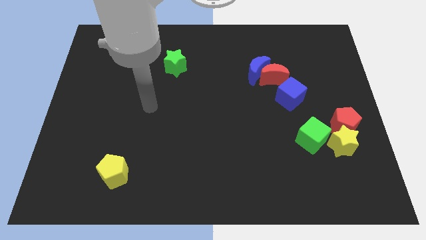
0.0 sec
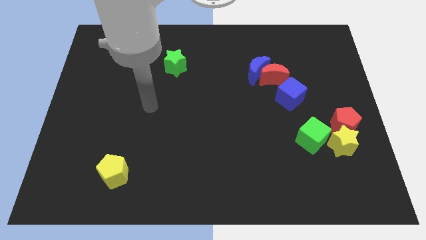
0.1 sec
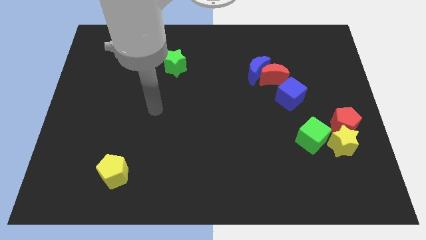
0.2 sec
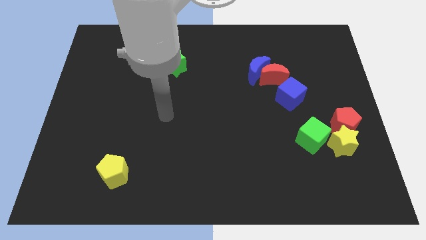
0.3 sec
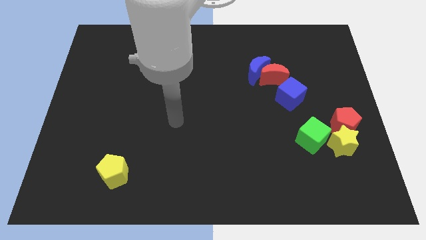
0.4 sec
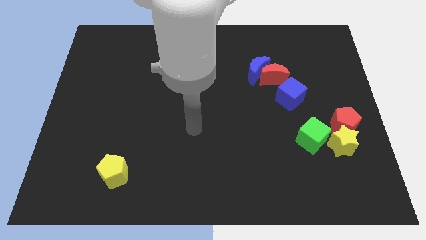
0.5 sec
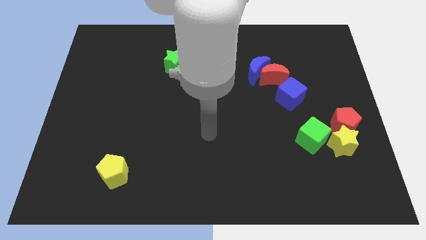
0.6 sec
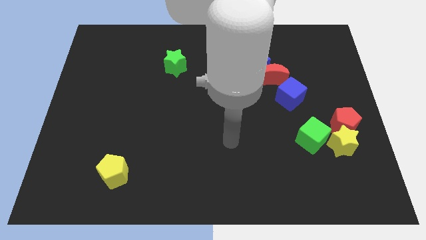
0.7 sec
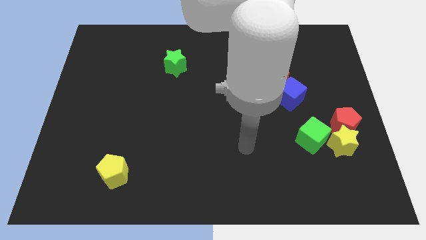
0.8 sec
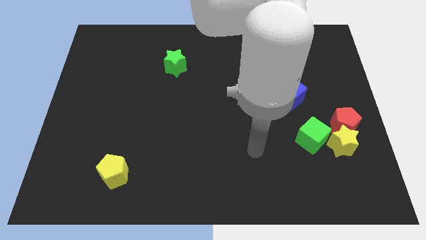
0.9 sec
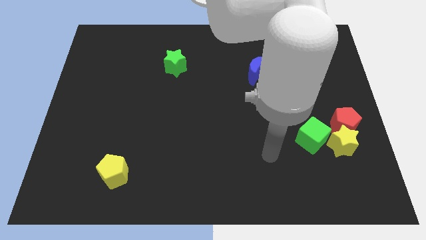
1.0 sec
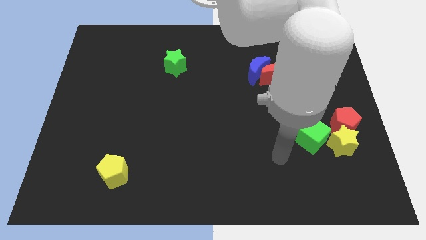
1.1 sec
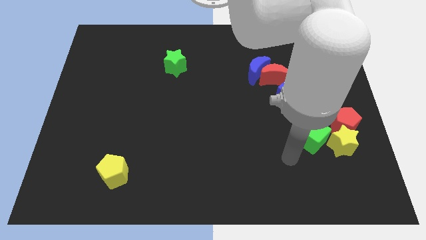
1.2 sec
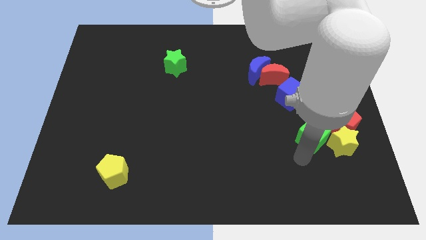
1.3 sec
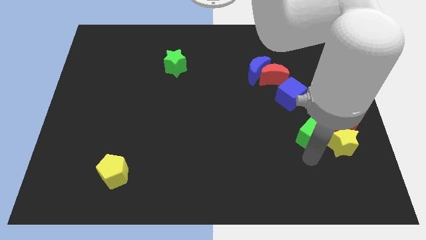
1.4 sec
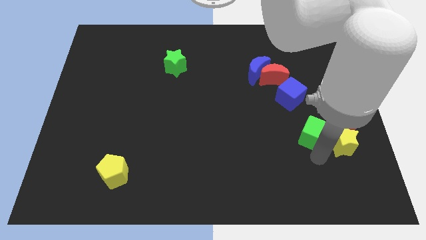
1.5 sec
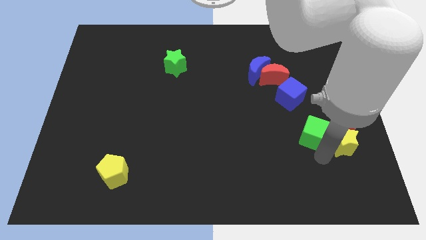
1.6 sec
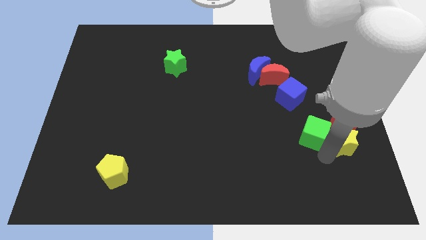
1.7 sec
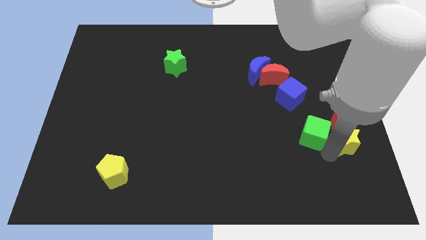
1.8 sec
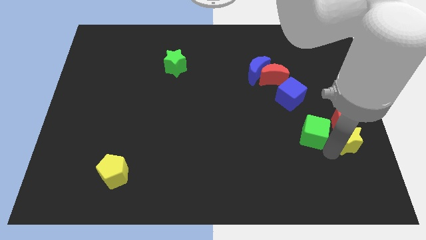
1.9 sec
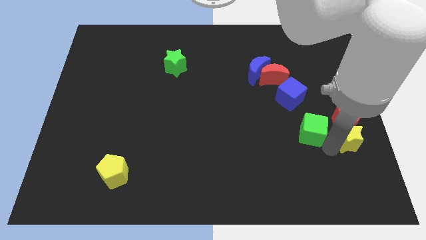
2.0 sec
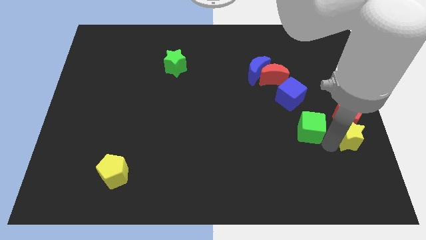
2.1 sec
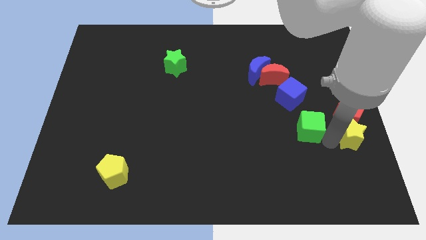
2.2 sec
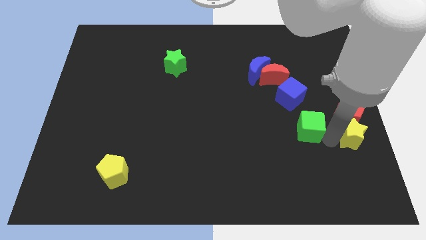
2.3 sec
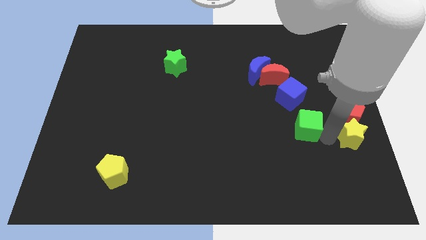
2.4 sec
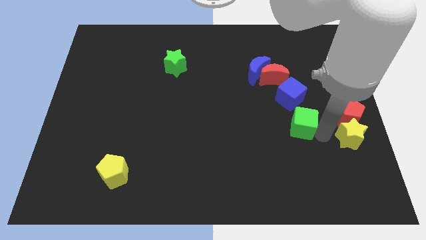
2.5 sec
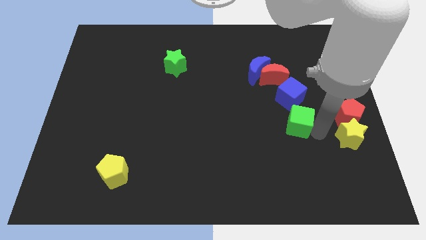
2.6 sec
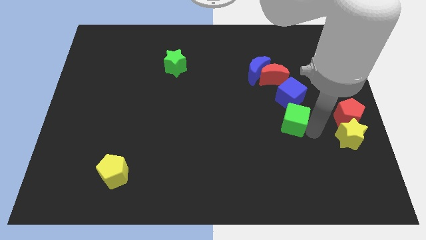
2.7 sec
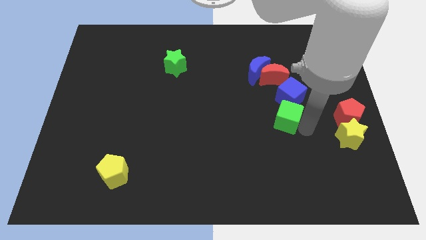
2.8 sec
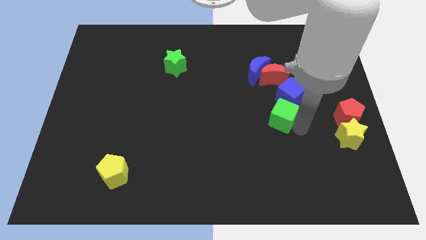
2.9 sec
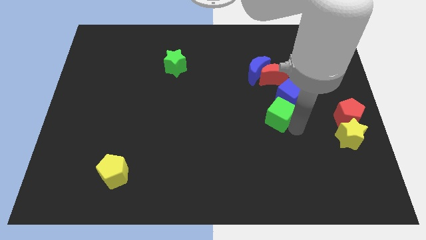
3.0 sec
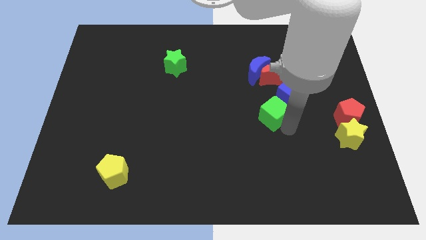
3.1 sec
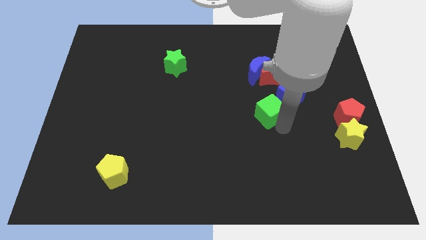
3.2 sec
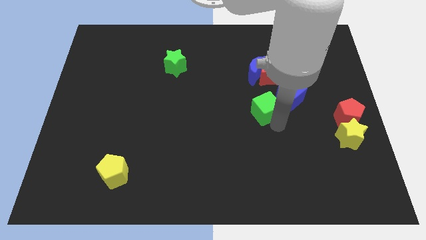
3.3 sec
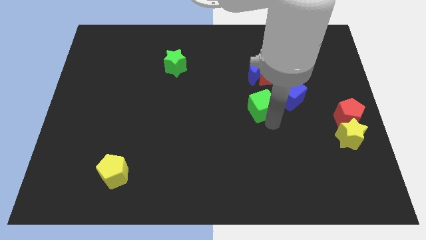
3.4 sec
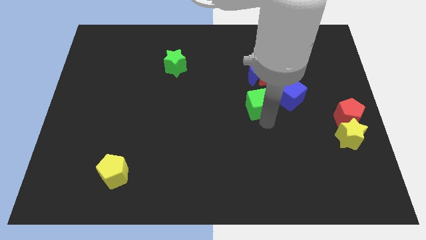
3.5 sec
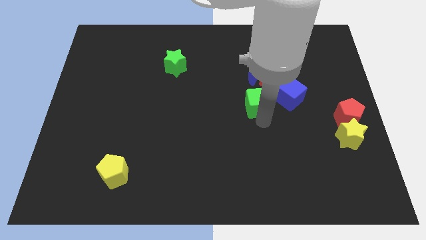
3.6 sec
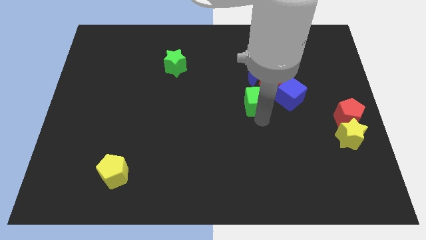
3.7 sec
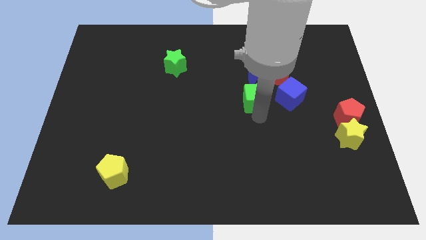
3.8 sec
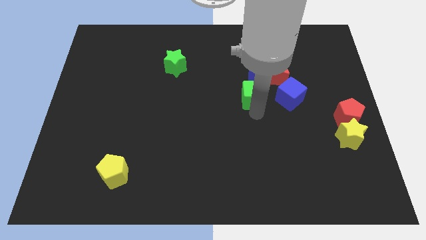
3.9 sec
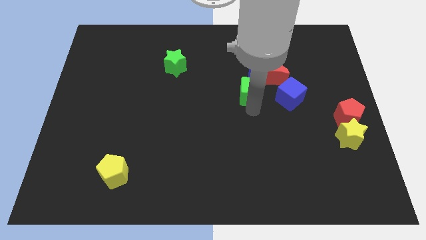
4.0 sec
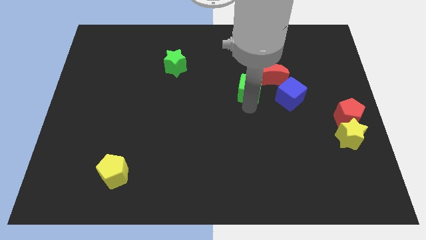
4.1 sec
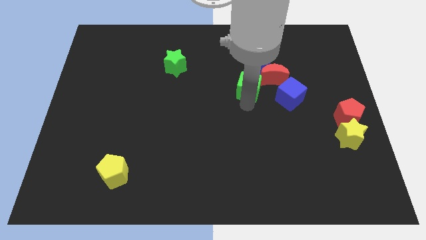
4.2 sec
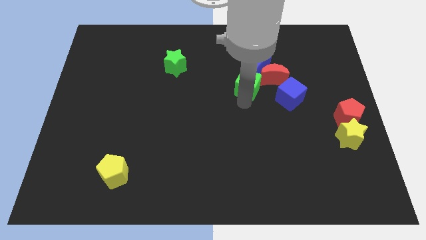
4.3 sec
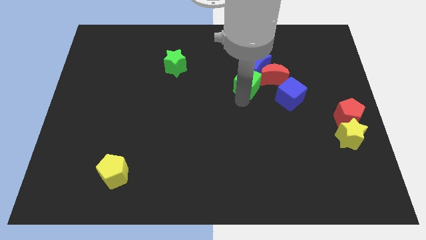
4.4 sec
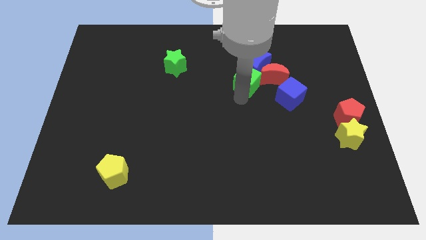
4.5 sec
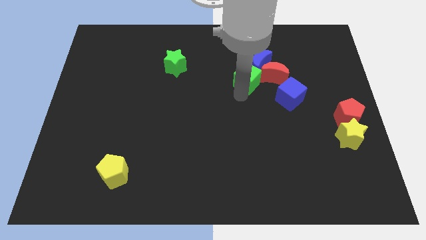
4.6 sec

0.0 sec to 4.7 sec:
push the green cube close to the blue moon

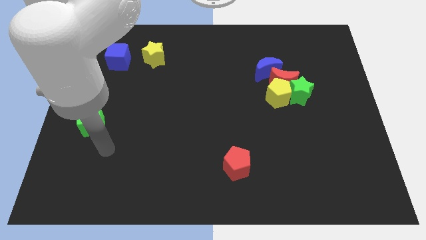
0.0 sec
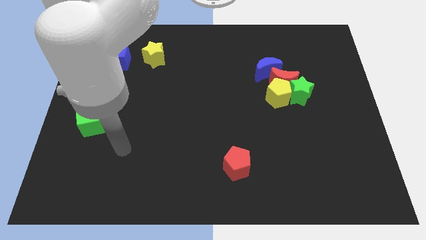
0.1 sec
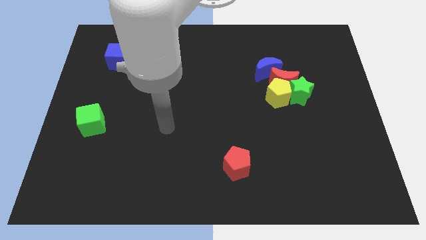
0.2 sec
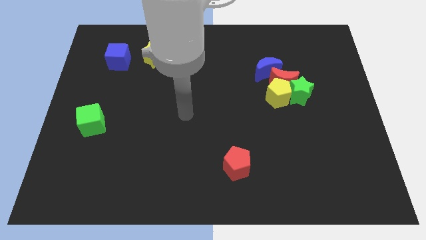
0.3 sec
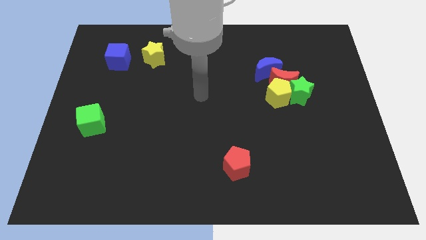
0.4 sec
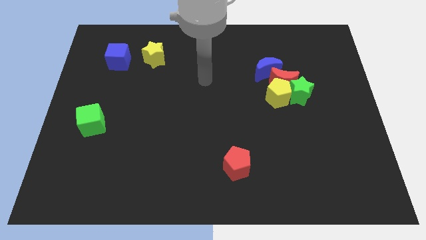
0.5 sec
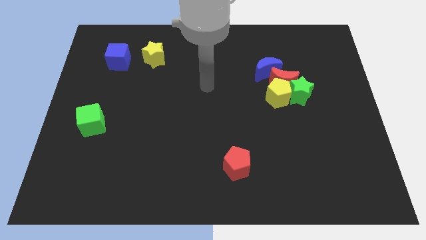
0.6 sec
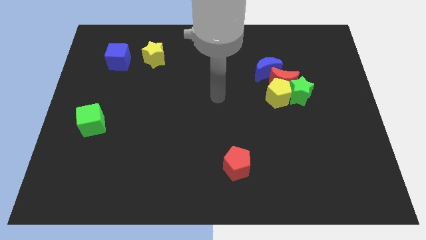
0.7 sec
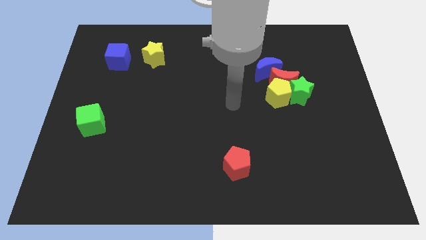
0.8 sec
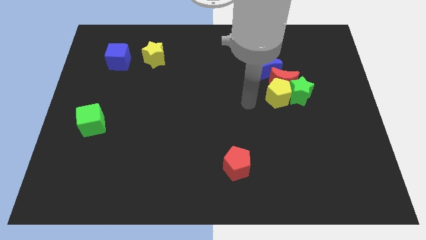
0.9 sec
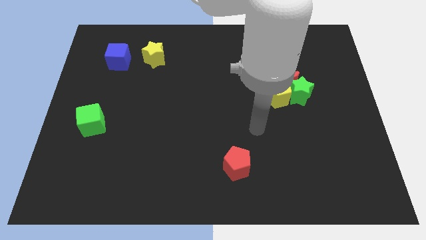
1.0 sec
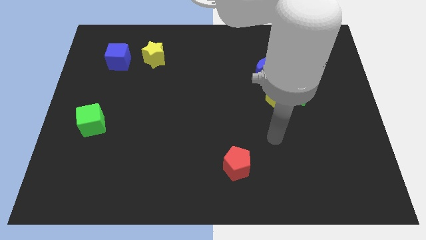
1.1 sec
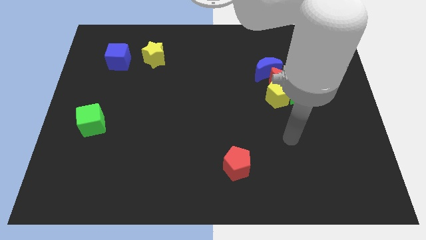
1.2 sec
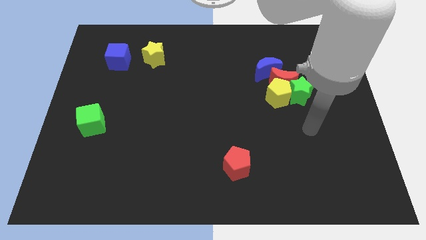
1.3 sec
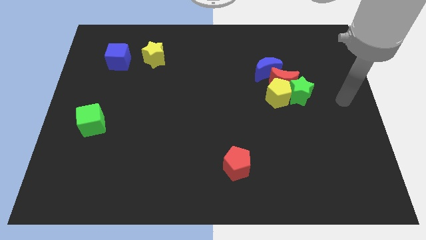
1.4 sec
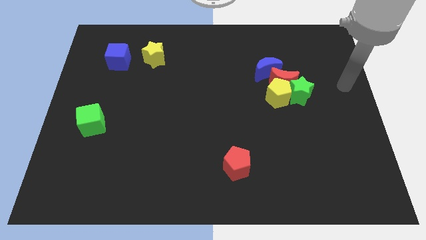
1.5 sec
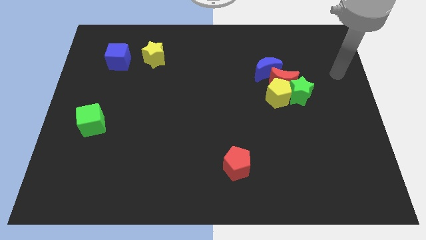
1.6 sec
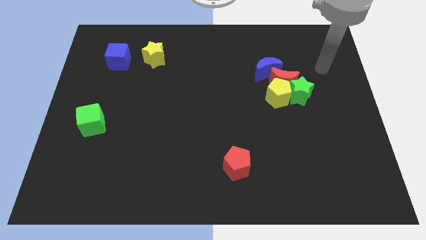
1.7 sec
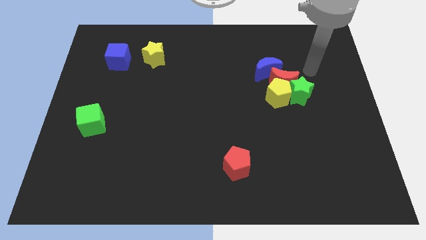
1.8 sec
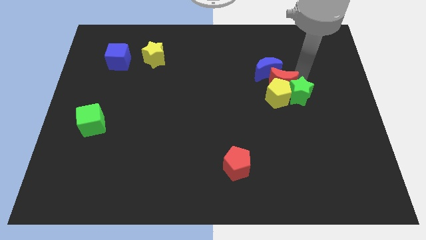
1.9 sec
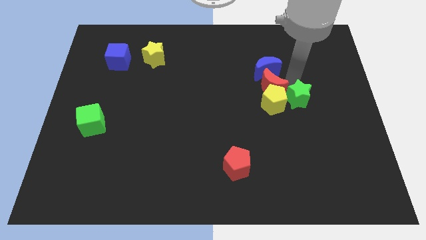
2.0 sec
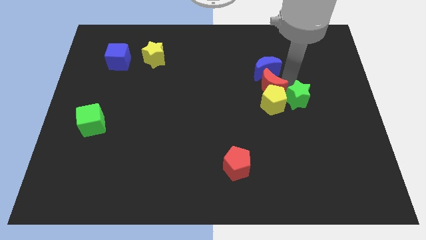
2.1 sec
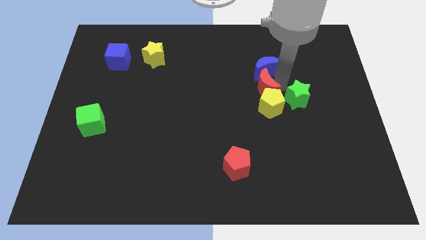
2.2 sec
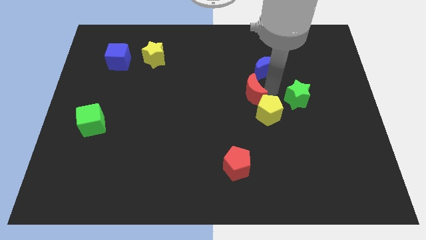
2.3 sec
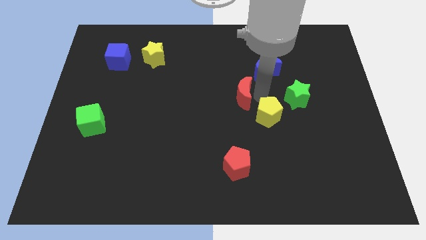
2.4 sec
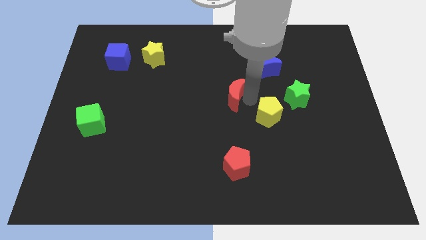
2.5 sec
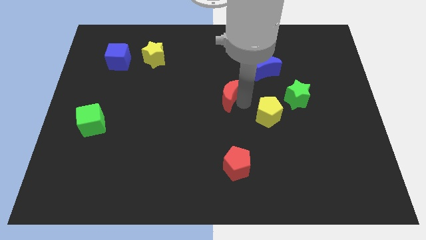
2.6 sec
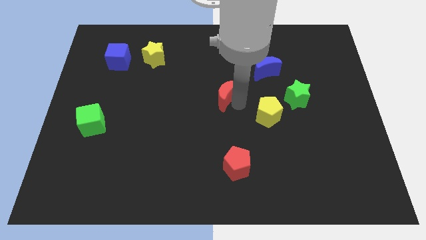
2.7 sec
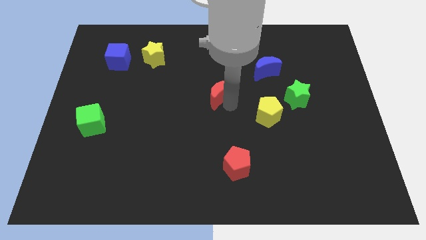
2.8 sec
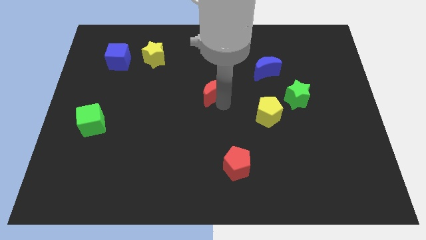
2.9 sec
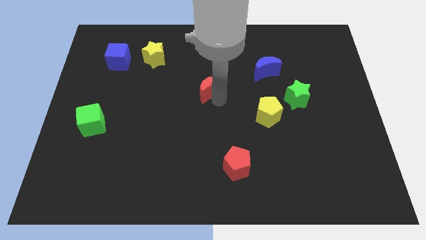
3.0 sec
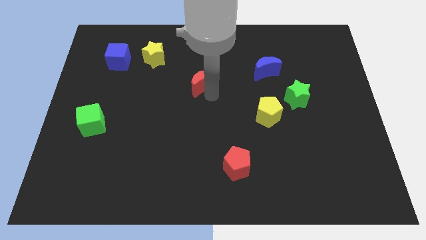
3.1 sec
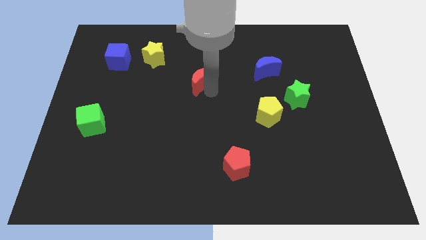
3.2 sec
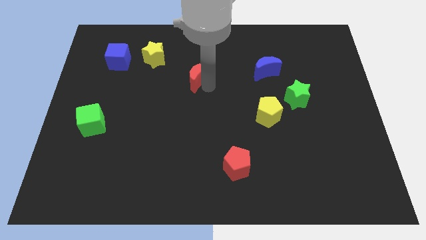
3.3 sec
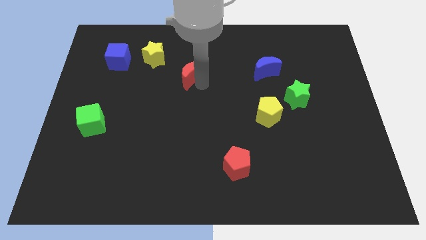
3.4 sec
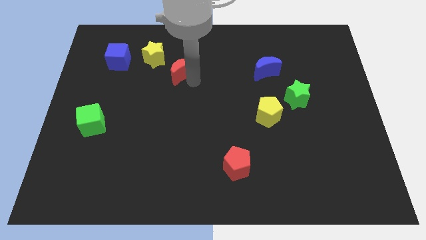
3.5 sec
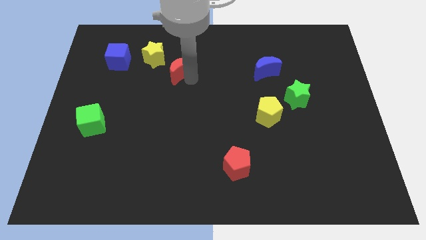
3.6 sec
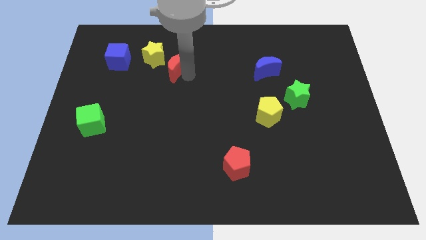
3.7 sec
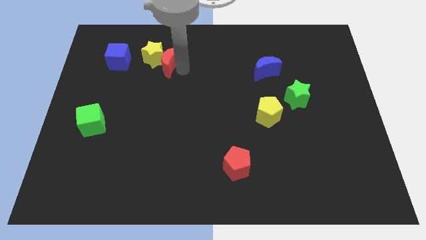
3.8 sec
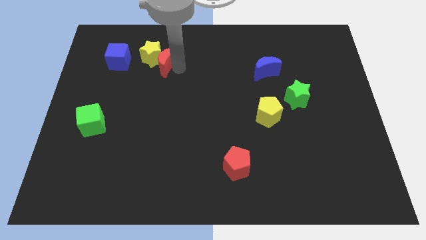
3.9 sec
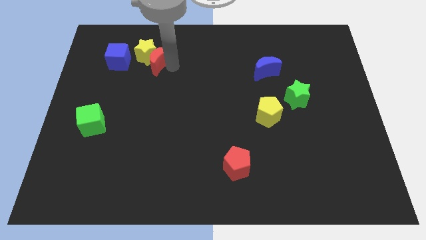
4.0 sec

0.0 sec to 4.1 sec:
slide the red moon to the yellow star
